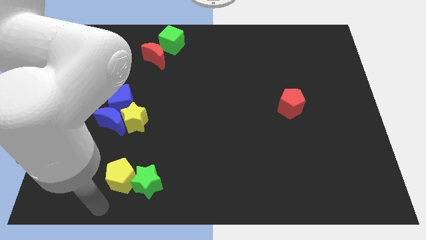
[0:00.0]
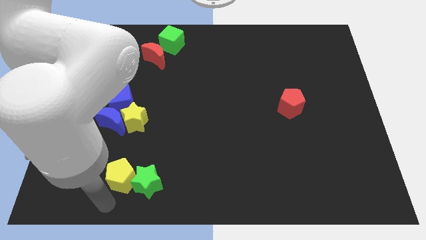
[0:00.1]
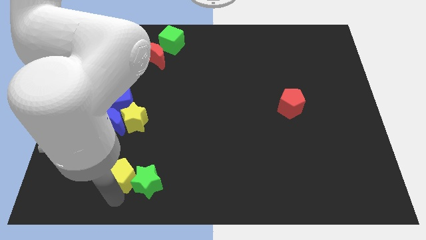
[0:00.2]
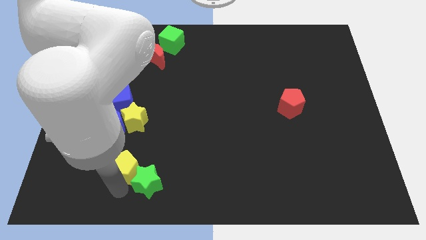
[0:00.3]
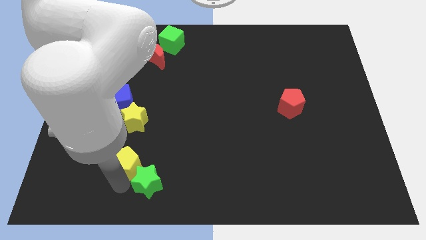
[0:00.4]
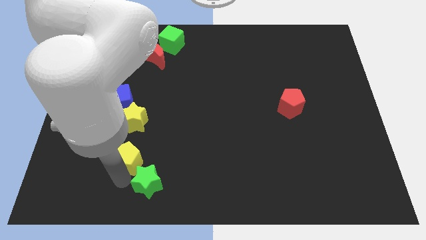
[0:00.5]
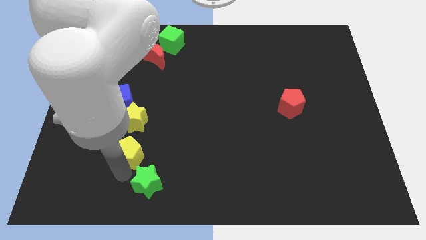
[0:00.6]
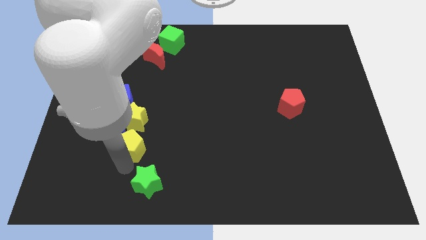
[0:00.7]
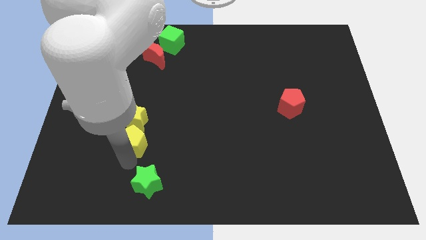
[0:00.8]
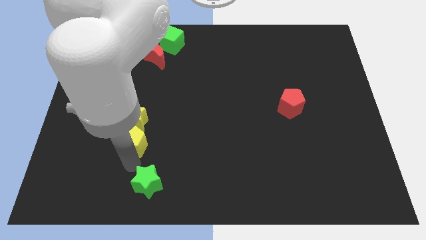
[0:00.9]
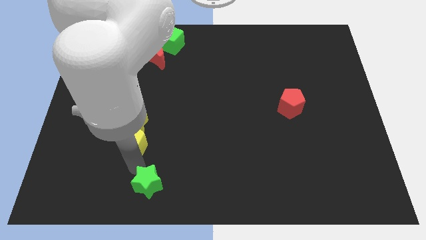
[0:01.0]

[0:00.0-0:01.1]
push the yellow pentagon below the yellow star

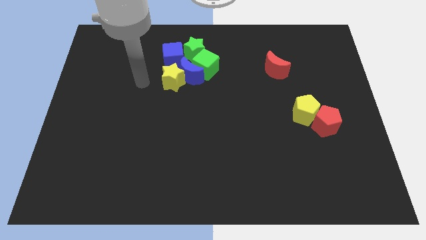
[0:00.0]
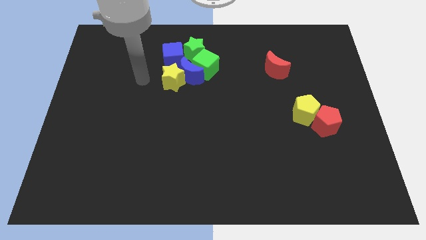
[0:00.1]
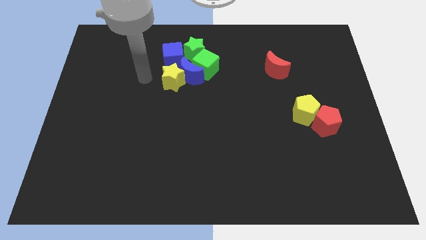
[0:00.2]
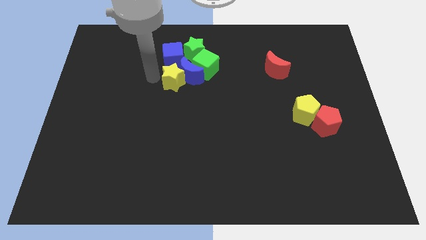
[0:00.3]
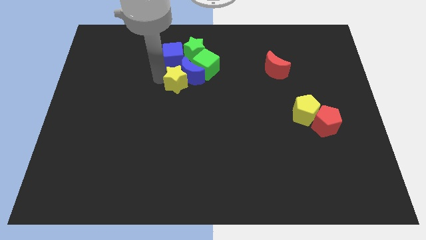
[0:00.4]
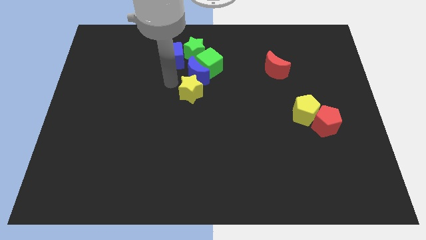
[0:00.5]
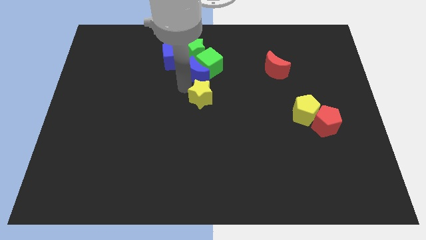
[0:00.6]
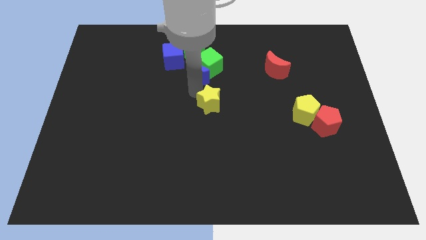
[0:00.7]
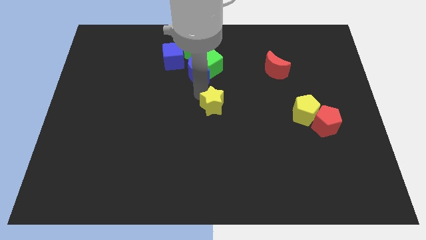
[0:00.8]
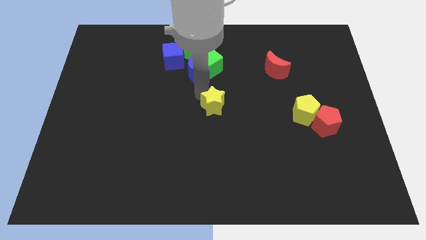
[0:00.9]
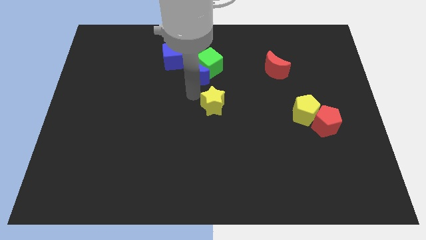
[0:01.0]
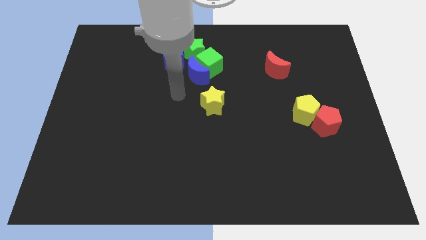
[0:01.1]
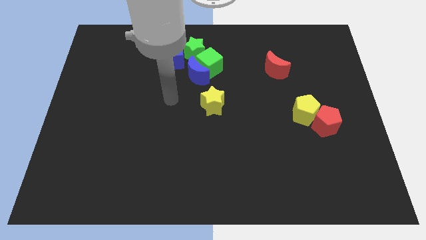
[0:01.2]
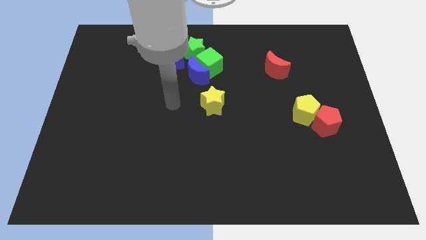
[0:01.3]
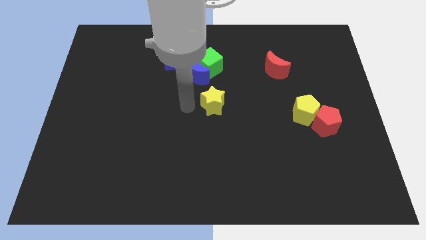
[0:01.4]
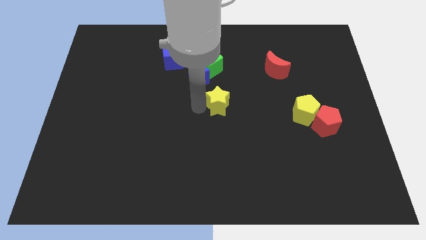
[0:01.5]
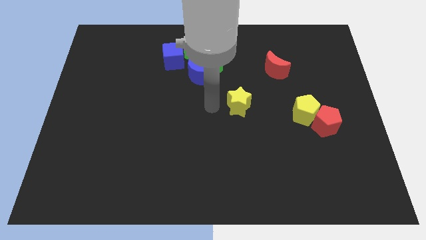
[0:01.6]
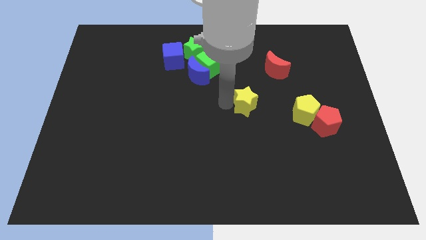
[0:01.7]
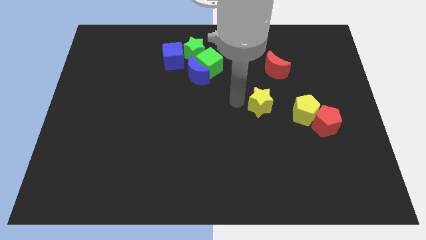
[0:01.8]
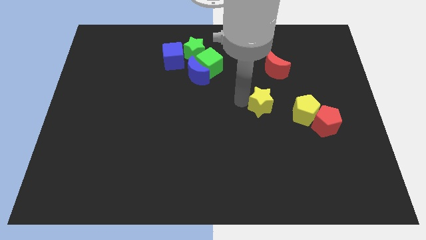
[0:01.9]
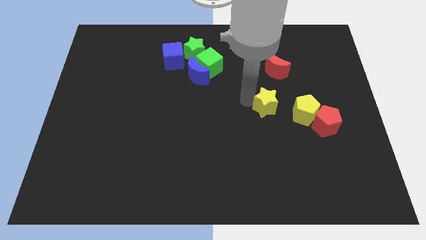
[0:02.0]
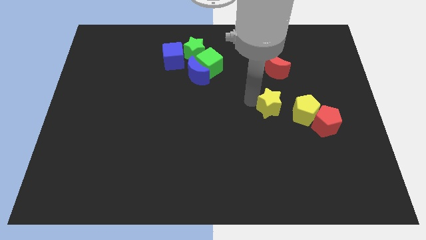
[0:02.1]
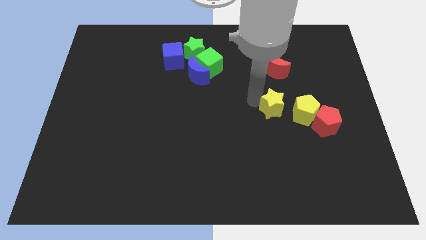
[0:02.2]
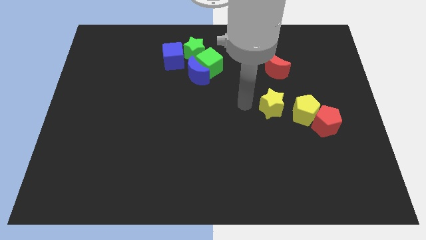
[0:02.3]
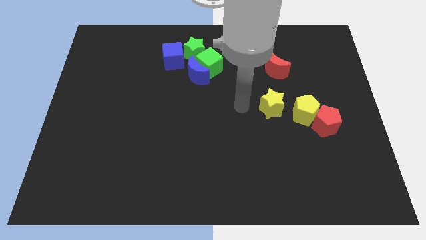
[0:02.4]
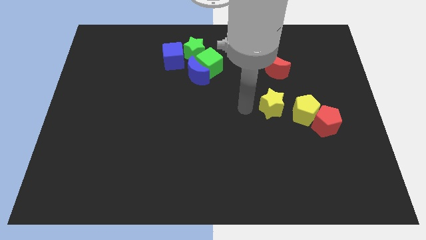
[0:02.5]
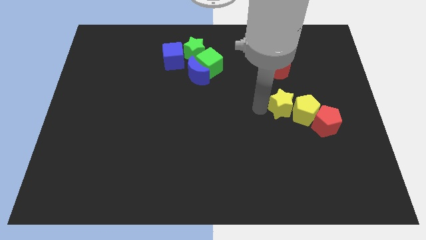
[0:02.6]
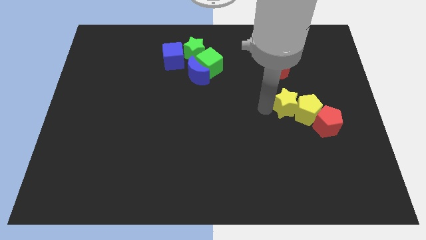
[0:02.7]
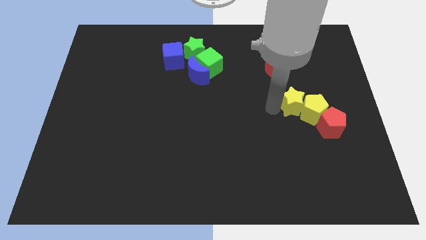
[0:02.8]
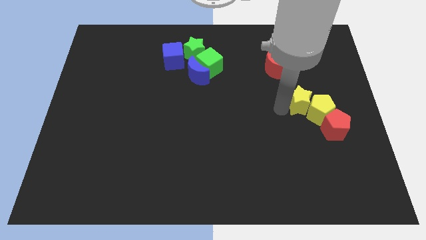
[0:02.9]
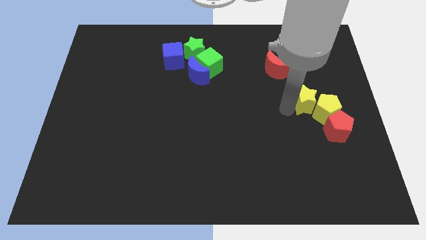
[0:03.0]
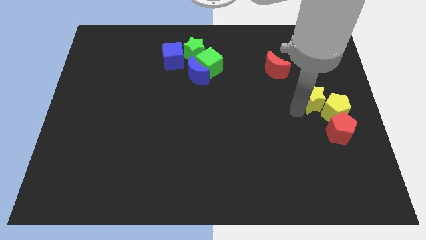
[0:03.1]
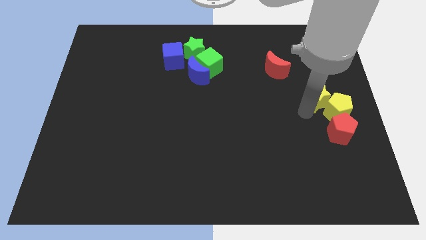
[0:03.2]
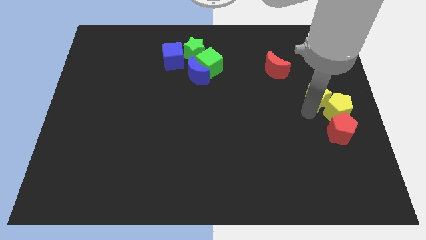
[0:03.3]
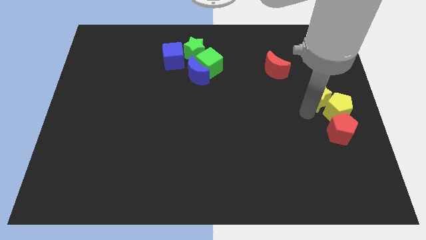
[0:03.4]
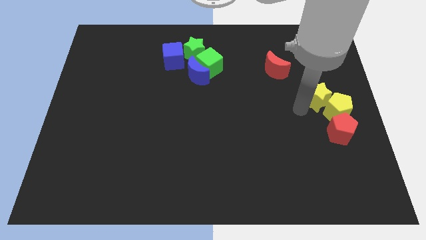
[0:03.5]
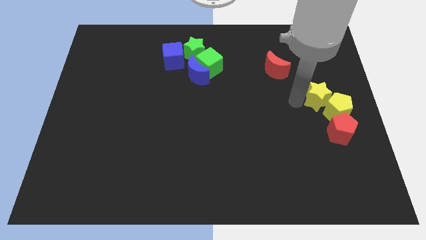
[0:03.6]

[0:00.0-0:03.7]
move the yellow star into the yellow pentagon

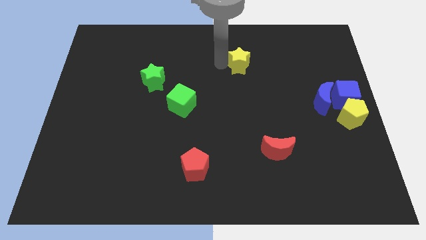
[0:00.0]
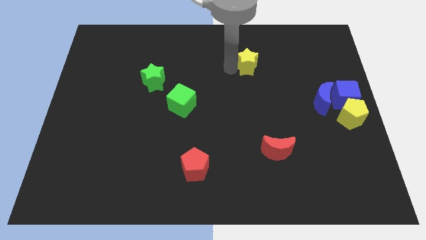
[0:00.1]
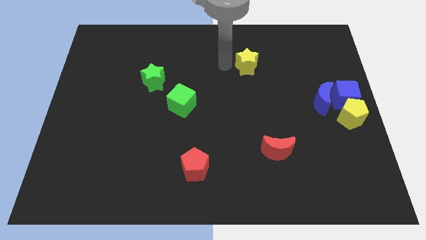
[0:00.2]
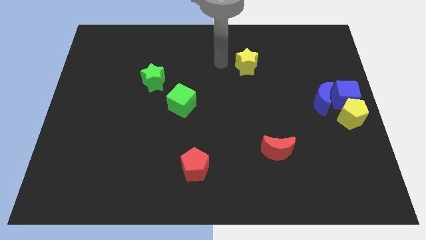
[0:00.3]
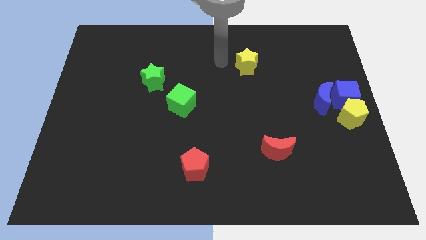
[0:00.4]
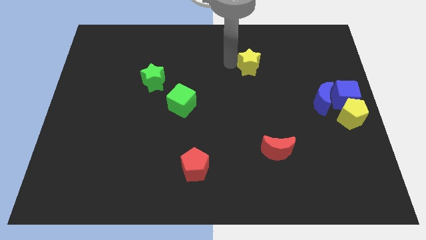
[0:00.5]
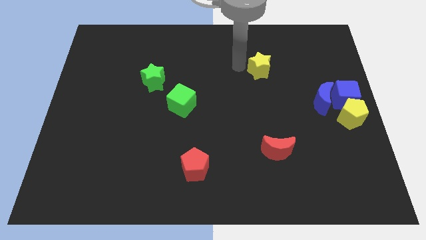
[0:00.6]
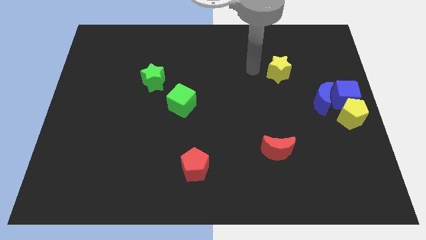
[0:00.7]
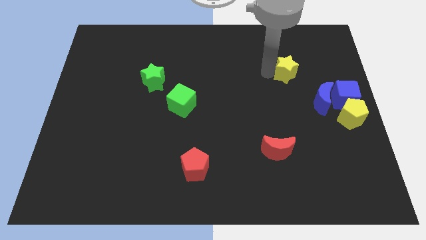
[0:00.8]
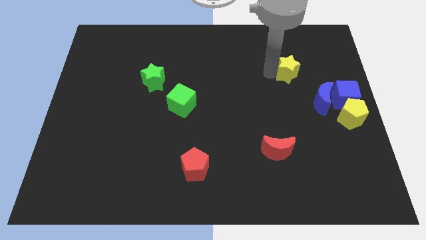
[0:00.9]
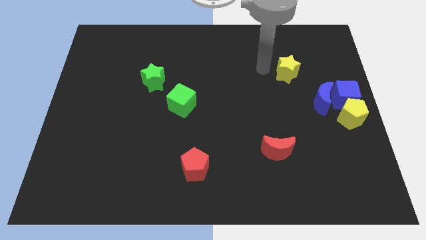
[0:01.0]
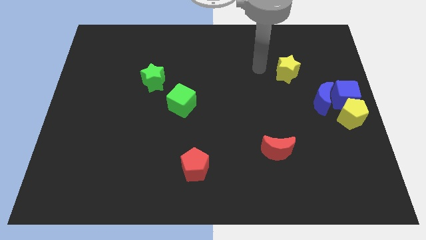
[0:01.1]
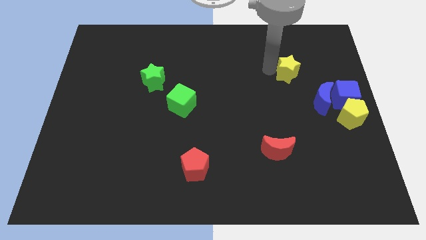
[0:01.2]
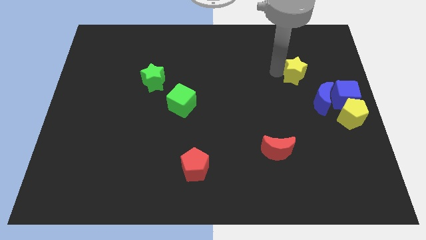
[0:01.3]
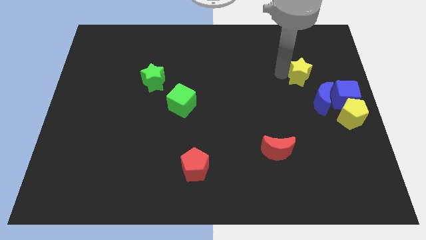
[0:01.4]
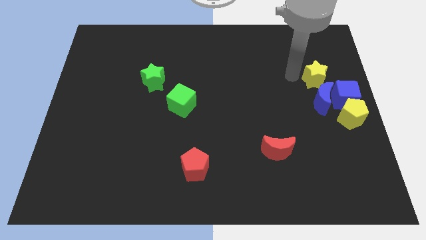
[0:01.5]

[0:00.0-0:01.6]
move the yellow star to the top left of the blue cube

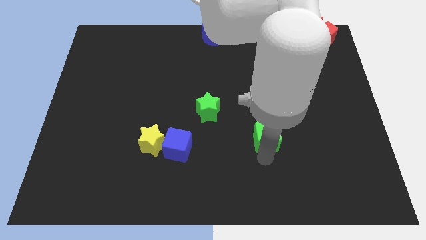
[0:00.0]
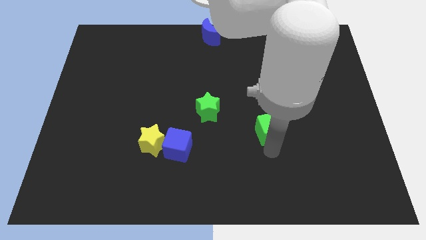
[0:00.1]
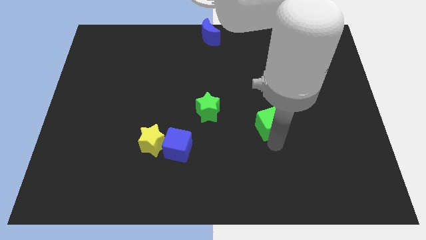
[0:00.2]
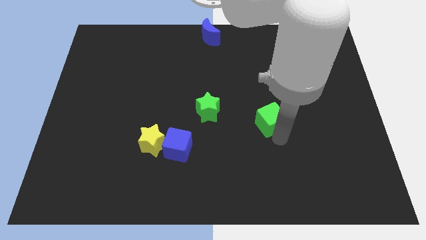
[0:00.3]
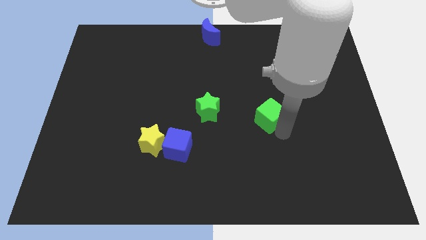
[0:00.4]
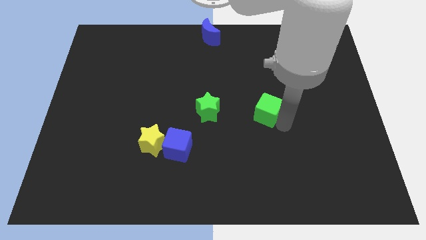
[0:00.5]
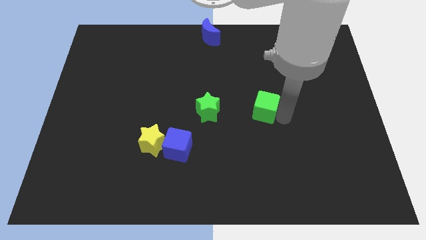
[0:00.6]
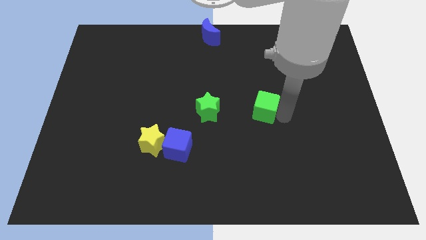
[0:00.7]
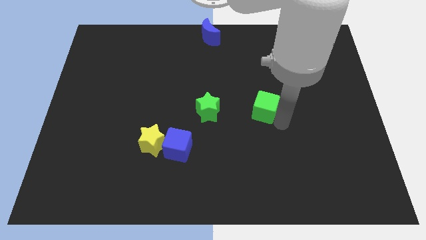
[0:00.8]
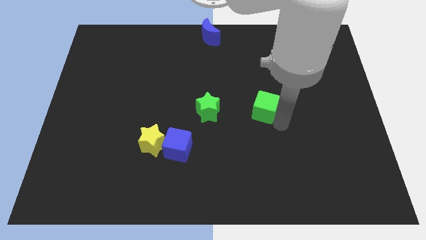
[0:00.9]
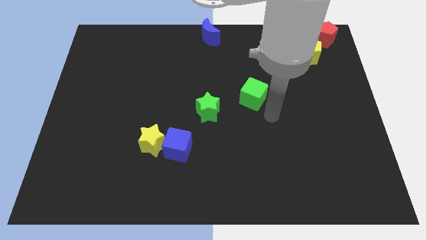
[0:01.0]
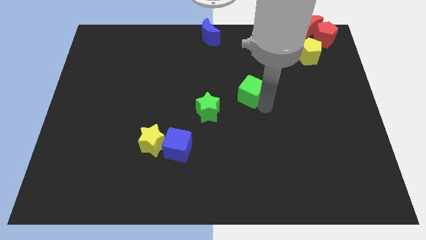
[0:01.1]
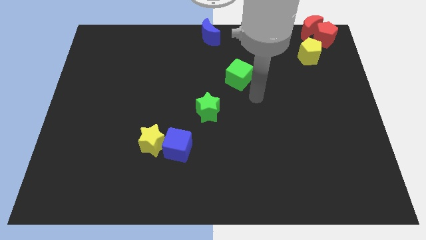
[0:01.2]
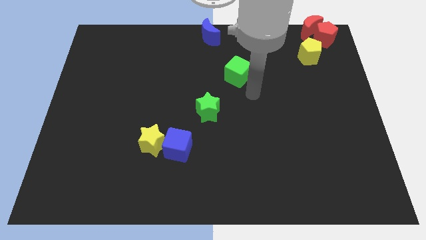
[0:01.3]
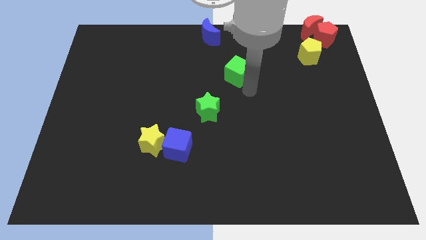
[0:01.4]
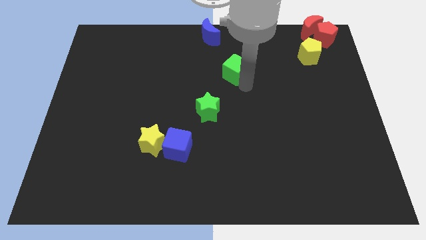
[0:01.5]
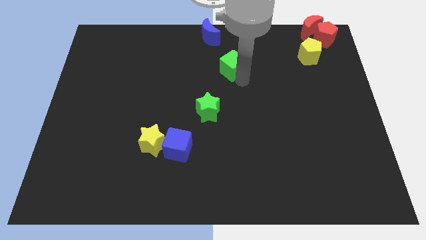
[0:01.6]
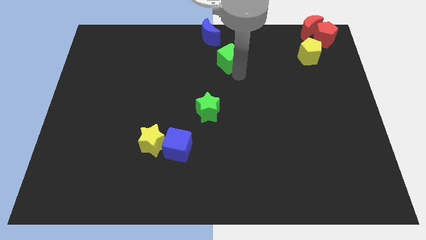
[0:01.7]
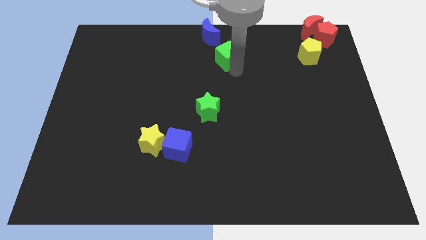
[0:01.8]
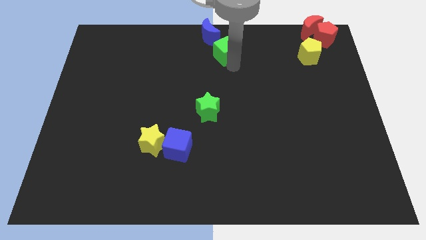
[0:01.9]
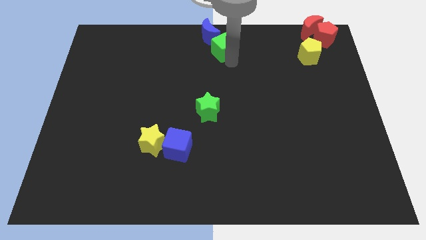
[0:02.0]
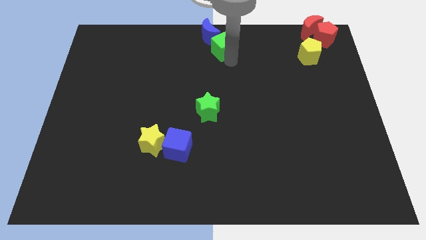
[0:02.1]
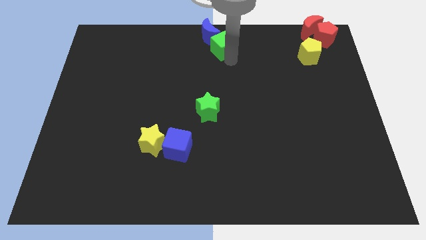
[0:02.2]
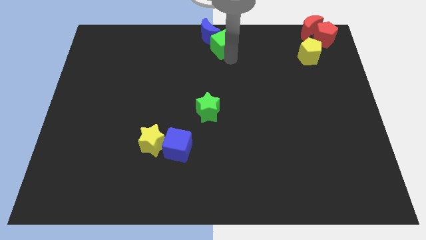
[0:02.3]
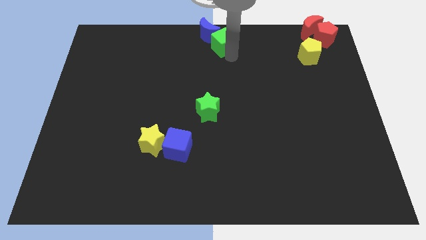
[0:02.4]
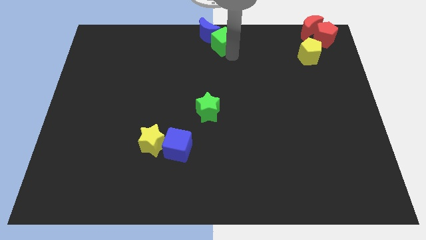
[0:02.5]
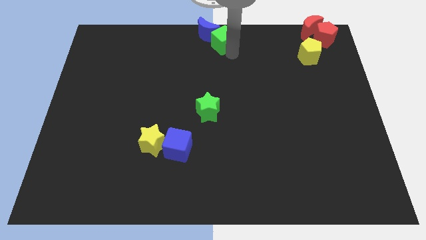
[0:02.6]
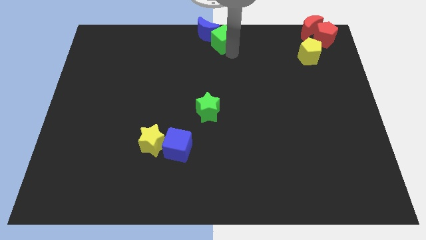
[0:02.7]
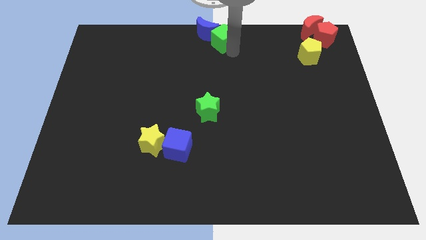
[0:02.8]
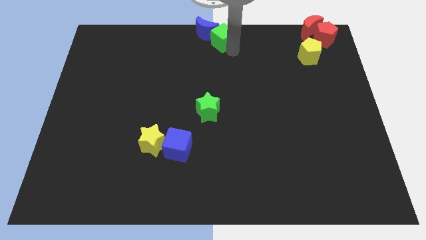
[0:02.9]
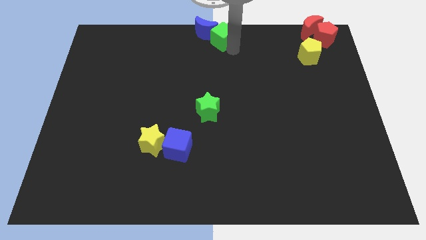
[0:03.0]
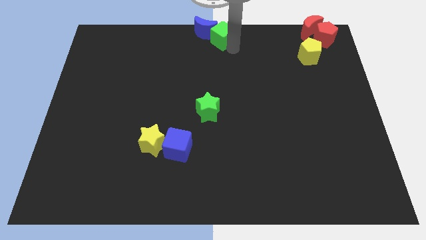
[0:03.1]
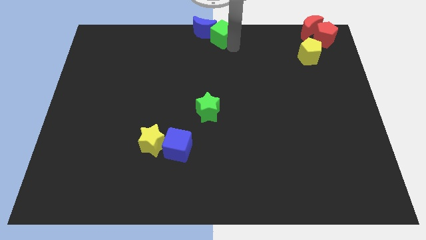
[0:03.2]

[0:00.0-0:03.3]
move the green cube towards the top center of the board
